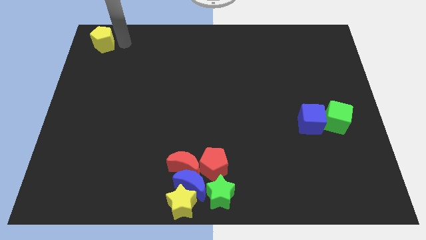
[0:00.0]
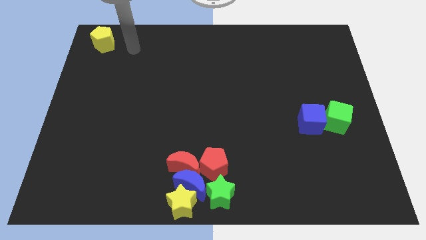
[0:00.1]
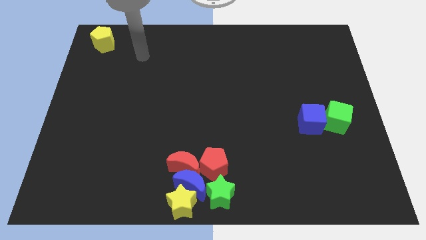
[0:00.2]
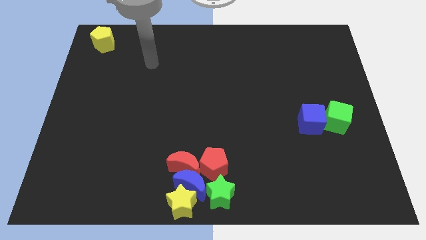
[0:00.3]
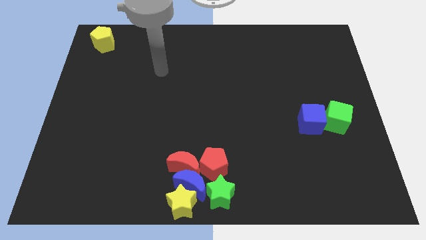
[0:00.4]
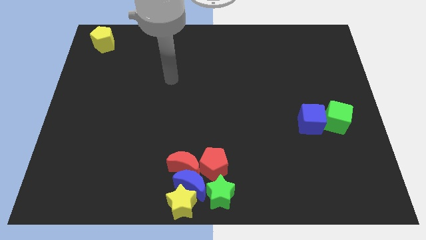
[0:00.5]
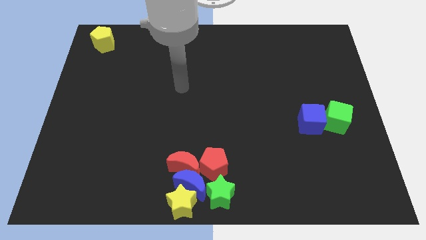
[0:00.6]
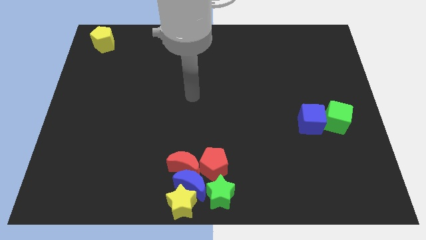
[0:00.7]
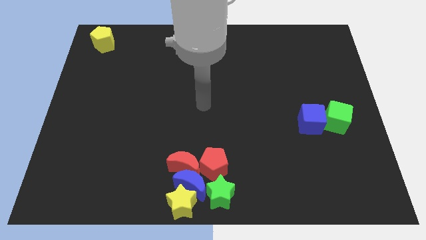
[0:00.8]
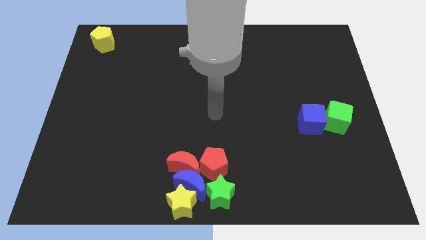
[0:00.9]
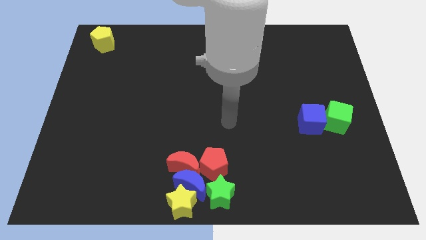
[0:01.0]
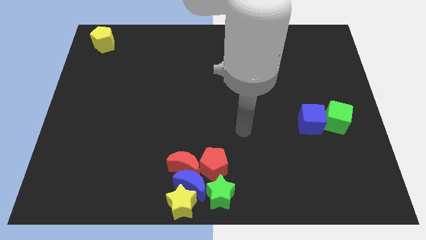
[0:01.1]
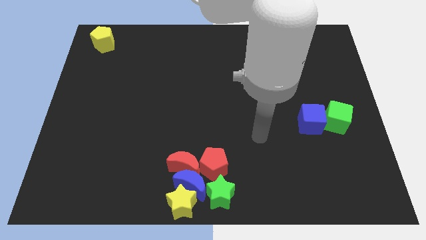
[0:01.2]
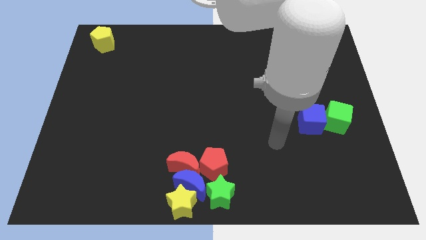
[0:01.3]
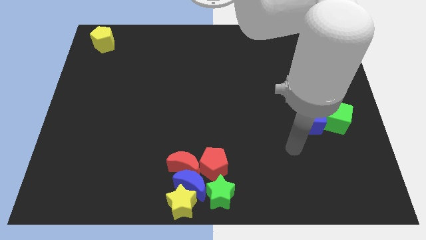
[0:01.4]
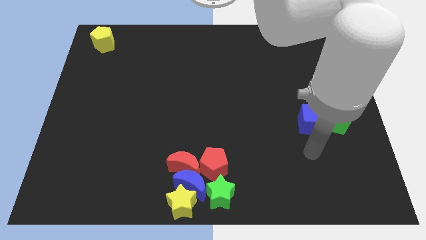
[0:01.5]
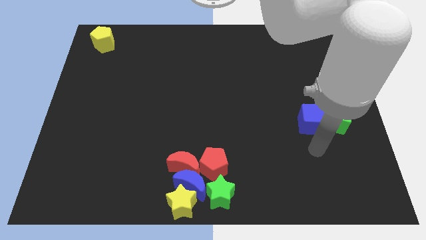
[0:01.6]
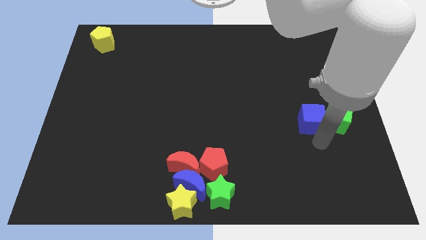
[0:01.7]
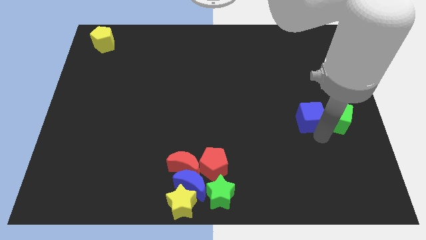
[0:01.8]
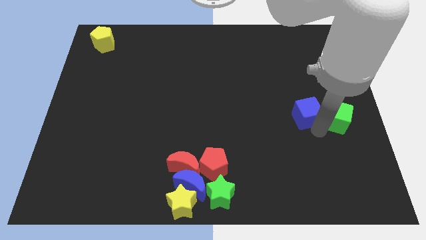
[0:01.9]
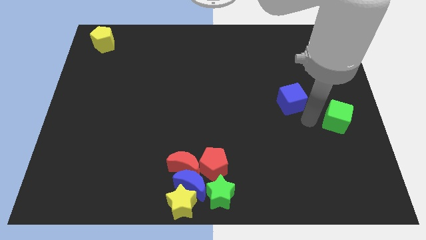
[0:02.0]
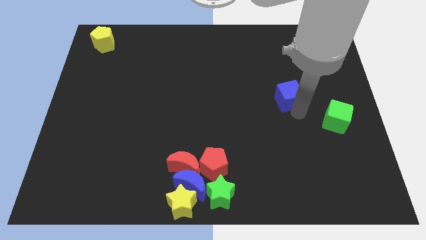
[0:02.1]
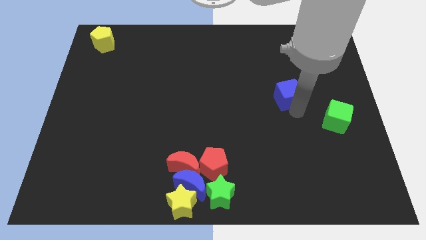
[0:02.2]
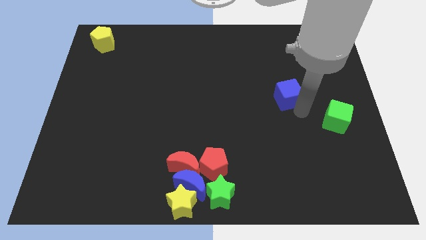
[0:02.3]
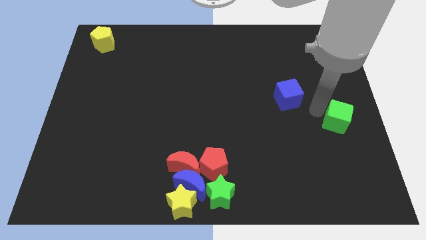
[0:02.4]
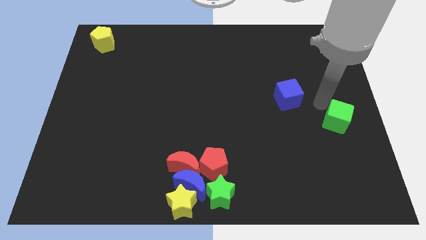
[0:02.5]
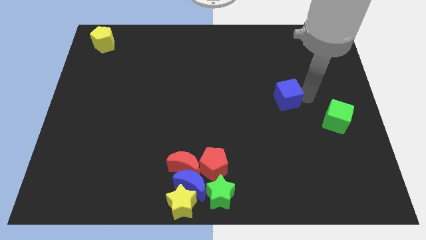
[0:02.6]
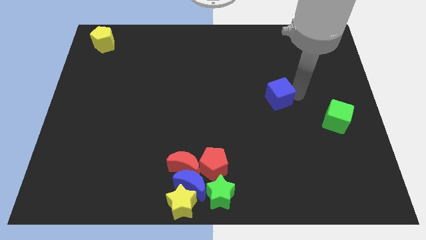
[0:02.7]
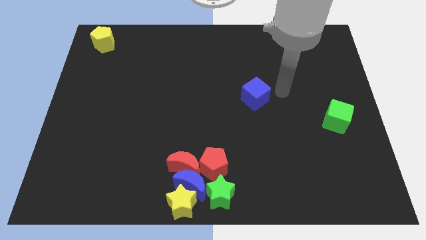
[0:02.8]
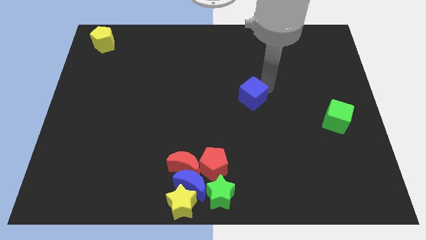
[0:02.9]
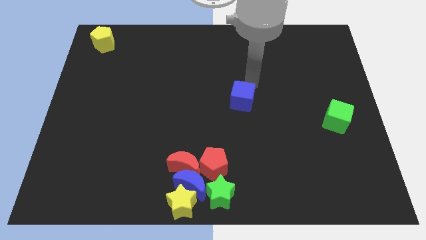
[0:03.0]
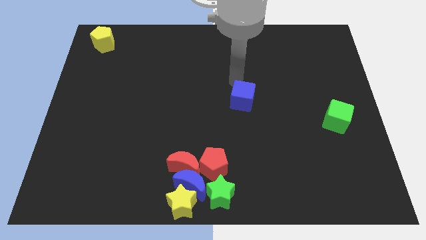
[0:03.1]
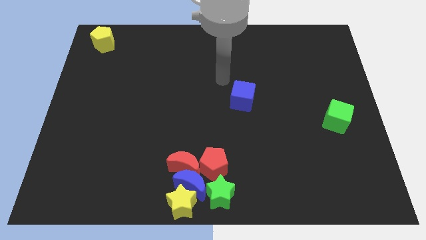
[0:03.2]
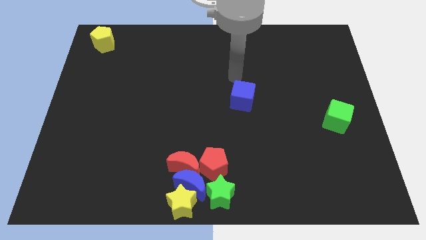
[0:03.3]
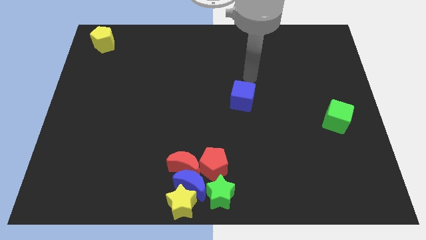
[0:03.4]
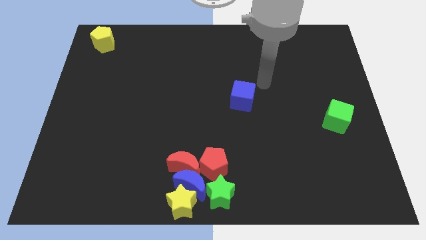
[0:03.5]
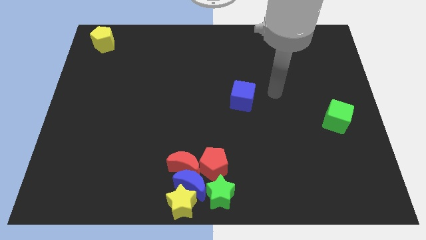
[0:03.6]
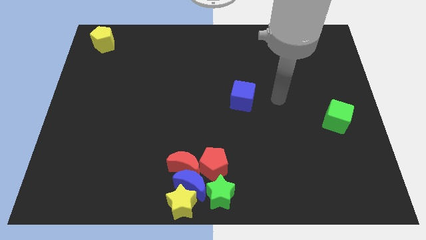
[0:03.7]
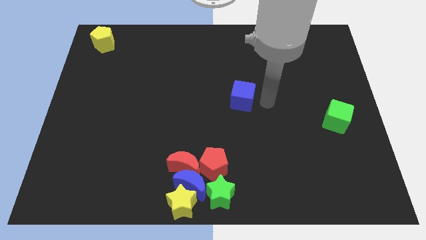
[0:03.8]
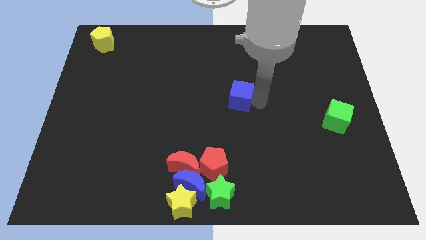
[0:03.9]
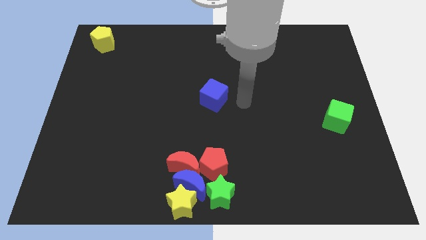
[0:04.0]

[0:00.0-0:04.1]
place the blue cube to the center of the board

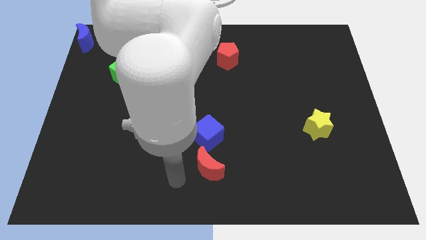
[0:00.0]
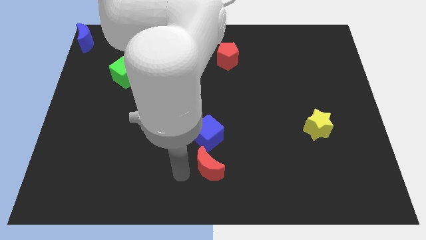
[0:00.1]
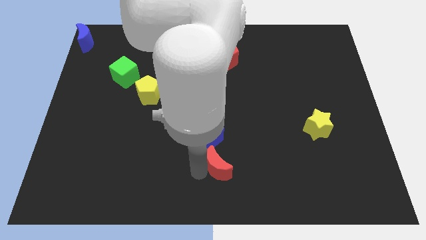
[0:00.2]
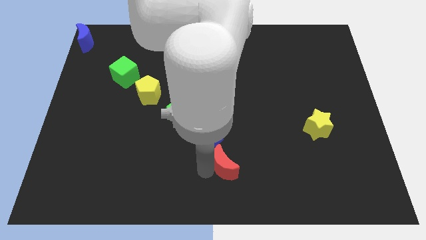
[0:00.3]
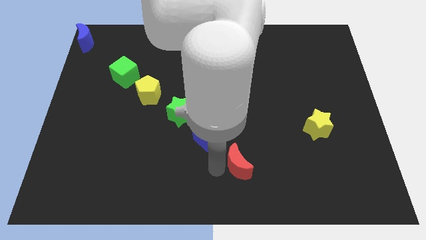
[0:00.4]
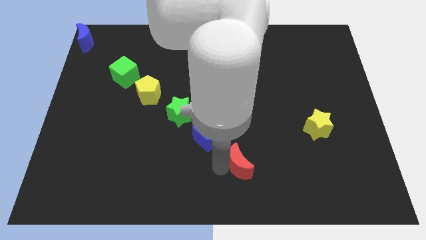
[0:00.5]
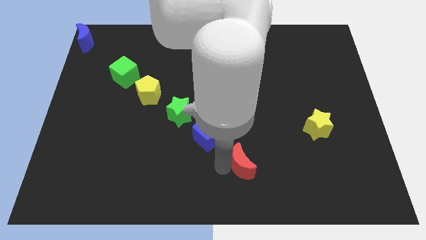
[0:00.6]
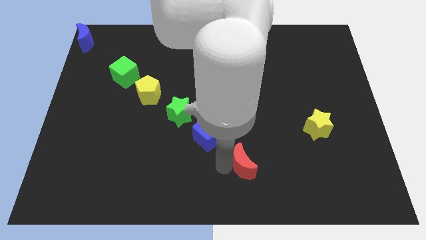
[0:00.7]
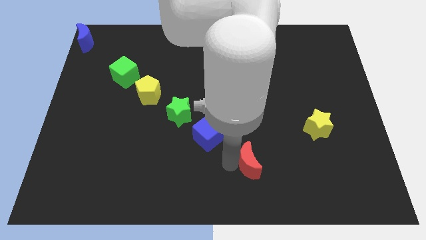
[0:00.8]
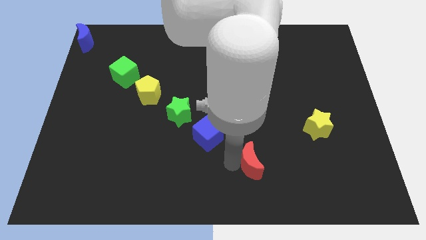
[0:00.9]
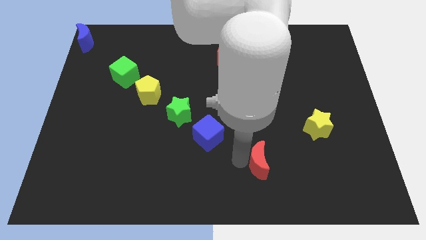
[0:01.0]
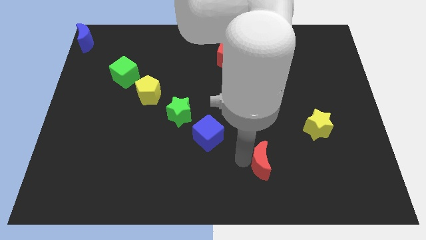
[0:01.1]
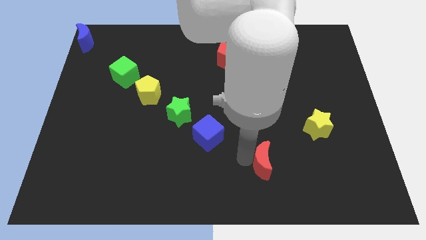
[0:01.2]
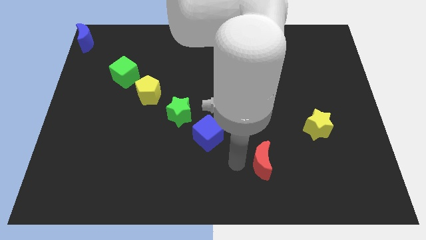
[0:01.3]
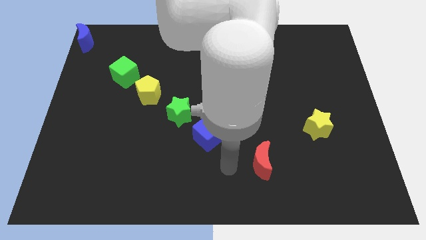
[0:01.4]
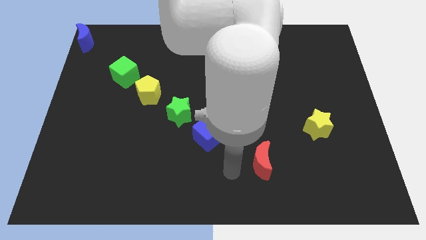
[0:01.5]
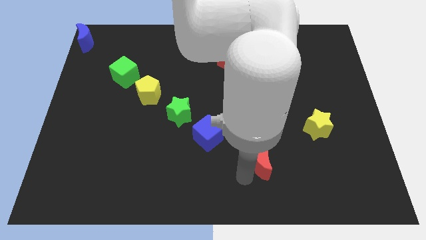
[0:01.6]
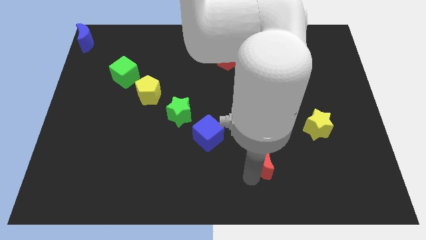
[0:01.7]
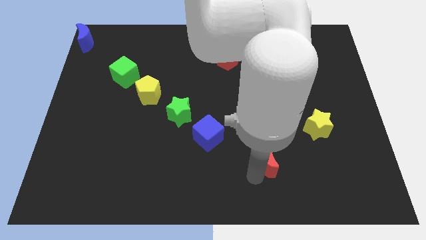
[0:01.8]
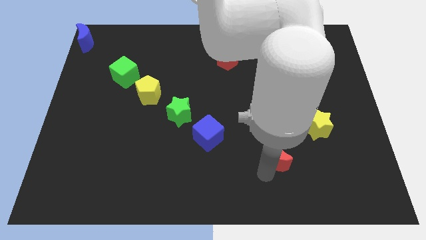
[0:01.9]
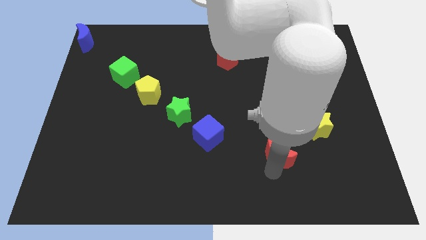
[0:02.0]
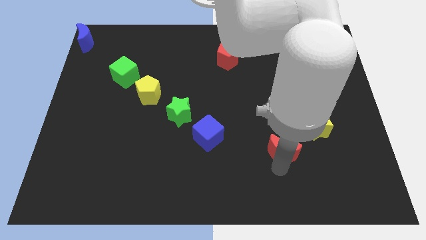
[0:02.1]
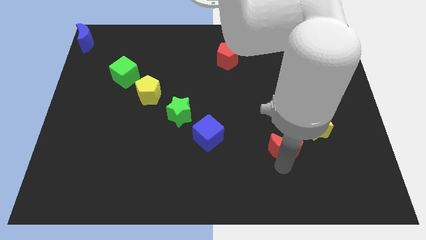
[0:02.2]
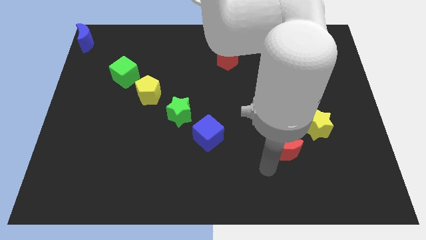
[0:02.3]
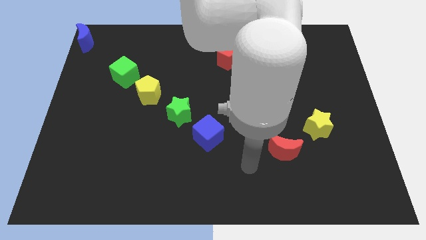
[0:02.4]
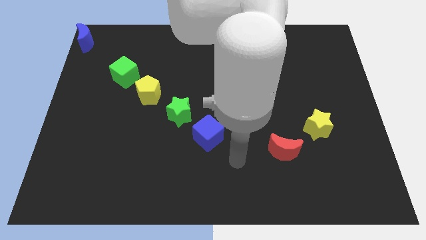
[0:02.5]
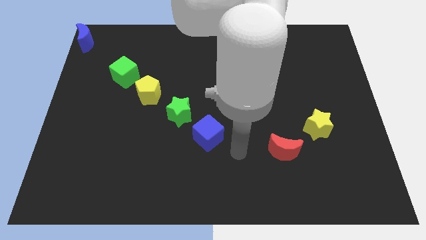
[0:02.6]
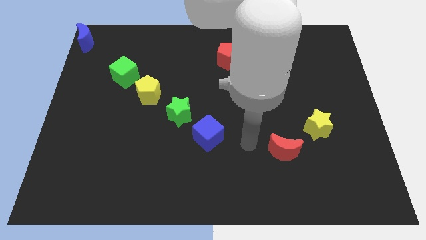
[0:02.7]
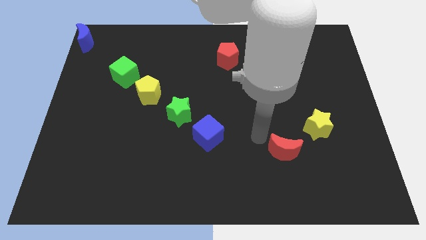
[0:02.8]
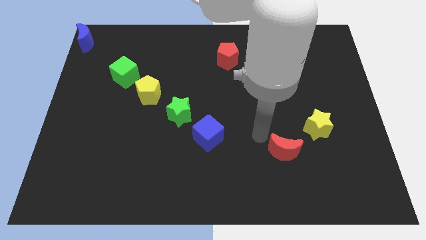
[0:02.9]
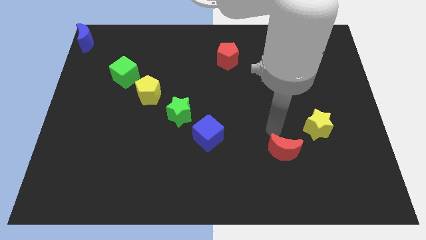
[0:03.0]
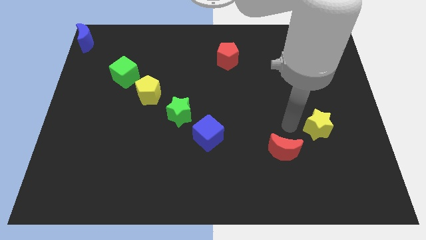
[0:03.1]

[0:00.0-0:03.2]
push the red moon away from the blue cube

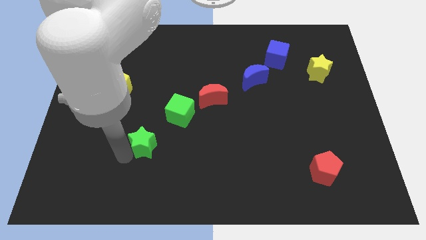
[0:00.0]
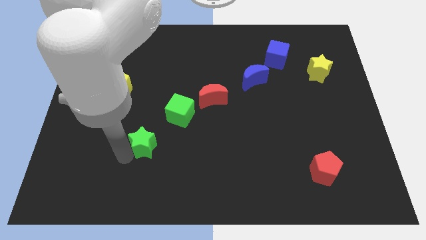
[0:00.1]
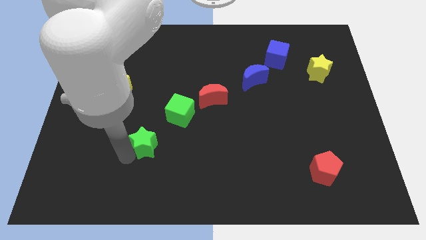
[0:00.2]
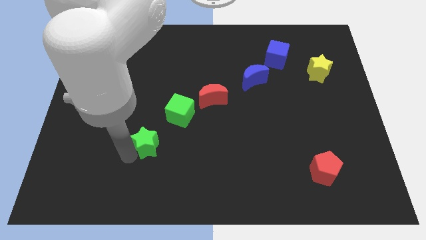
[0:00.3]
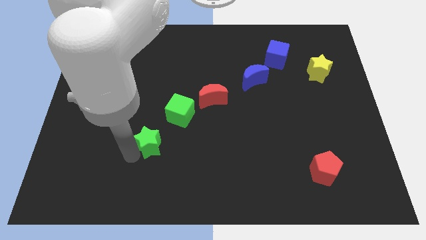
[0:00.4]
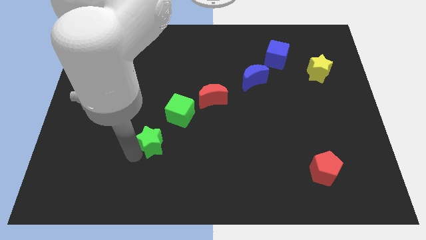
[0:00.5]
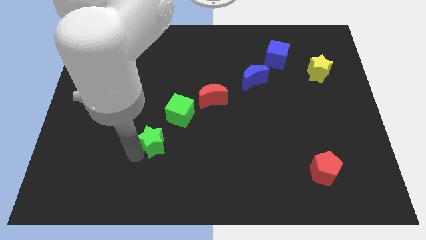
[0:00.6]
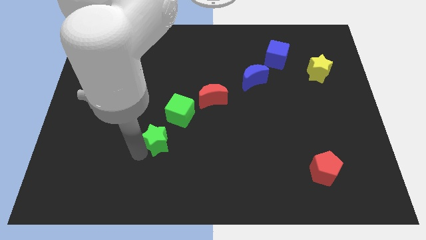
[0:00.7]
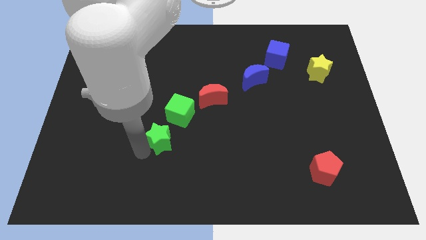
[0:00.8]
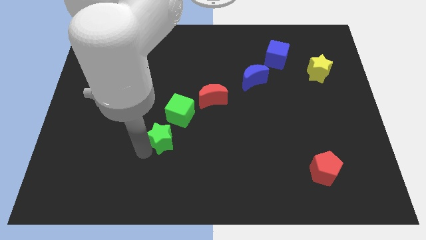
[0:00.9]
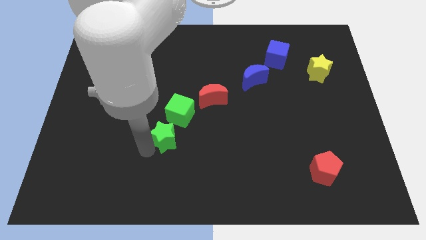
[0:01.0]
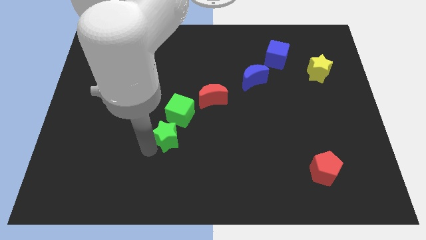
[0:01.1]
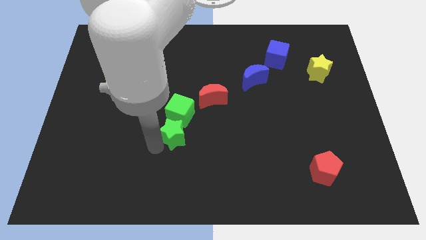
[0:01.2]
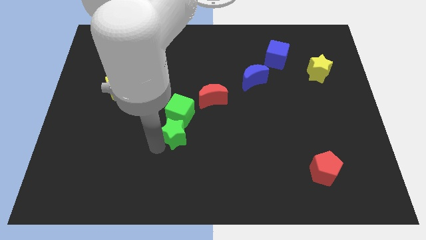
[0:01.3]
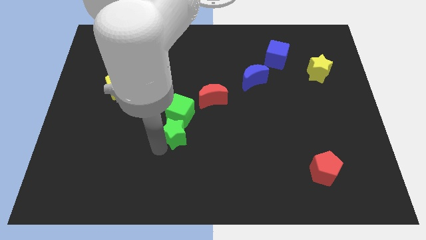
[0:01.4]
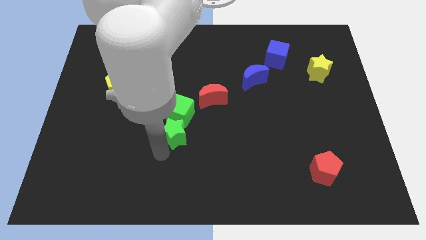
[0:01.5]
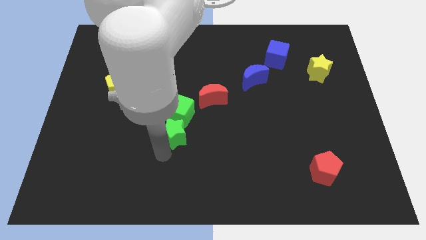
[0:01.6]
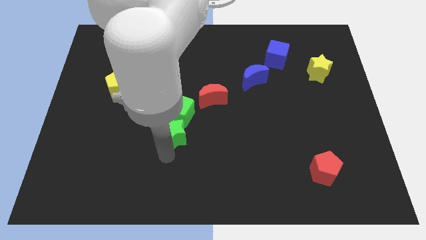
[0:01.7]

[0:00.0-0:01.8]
push the green star to the bottom of the green cube
